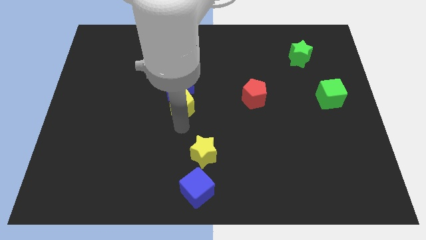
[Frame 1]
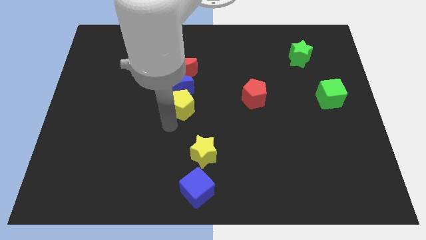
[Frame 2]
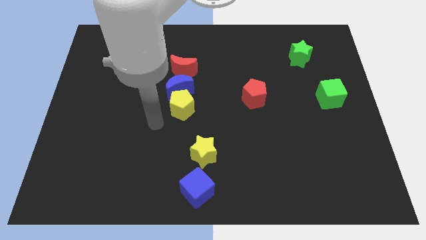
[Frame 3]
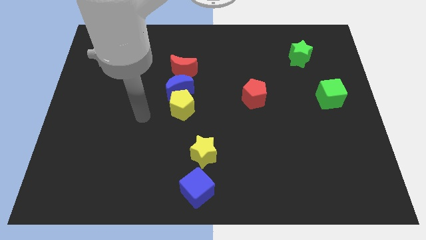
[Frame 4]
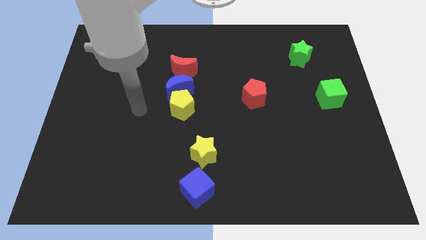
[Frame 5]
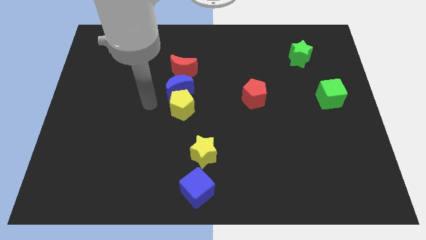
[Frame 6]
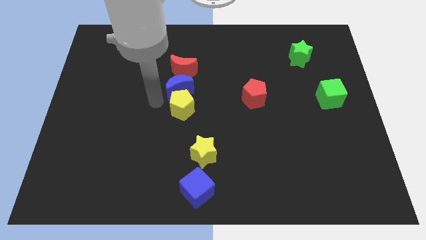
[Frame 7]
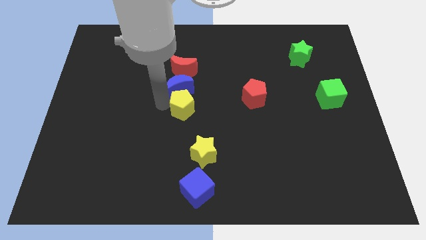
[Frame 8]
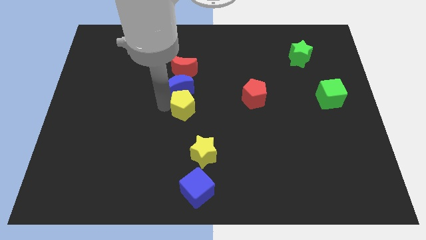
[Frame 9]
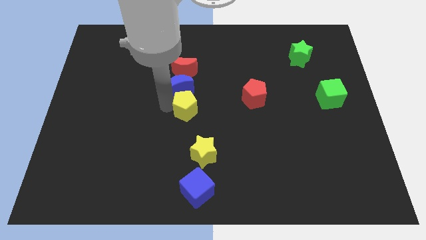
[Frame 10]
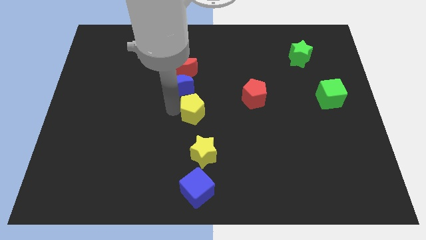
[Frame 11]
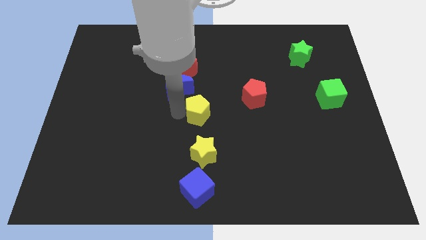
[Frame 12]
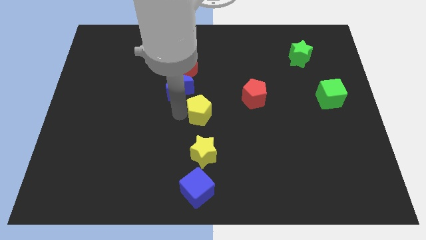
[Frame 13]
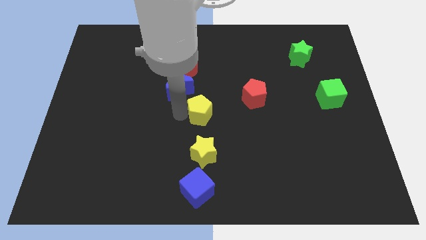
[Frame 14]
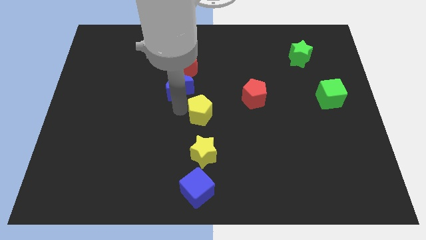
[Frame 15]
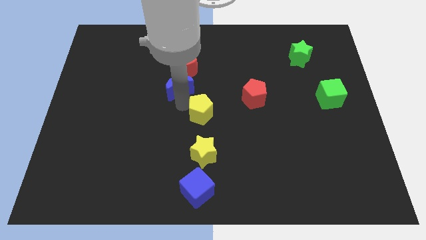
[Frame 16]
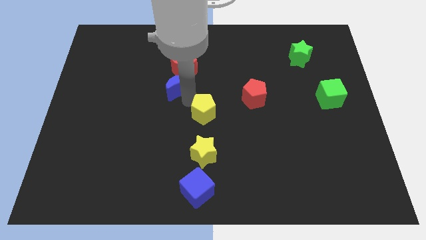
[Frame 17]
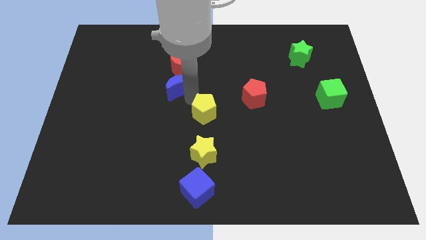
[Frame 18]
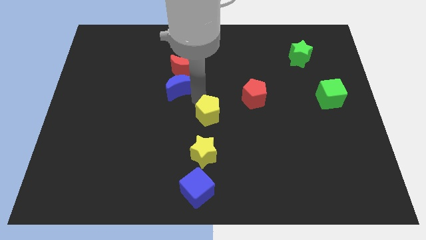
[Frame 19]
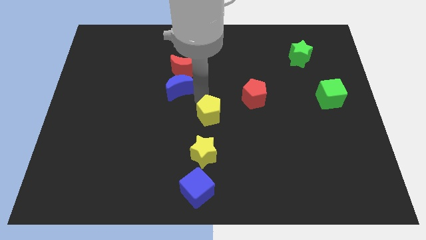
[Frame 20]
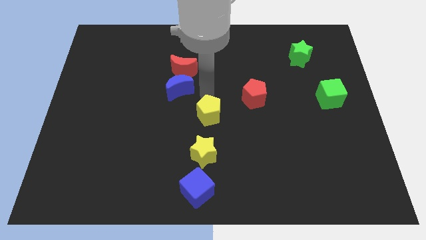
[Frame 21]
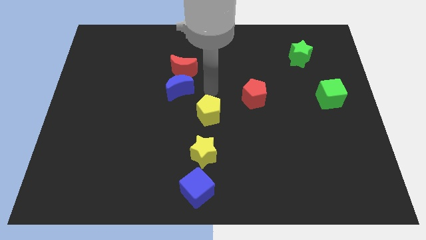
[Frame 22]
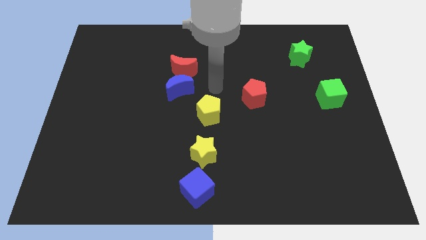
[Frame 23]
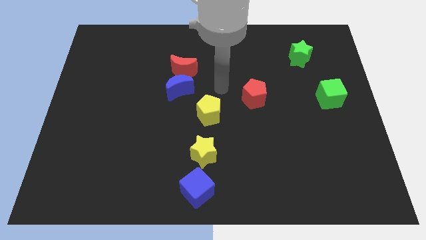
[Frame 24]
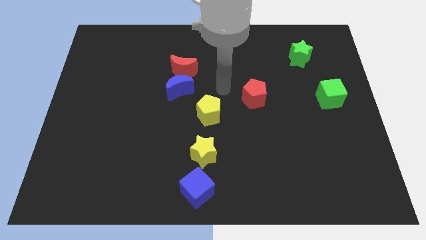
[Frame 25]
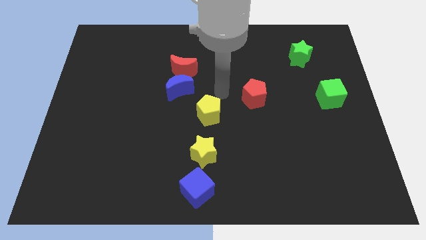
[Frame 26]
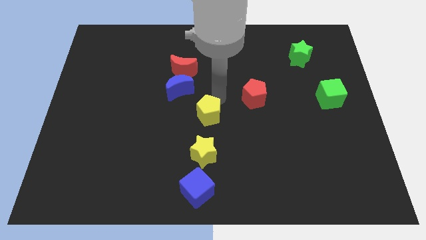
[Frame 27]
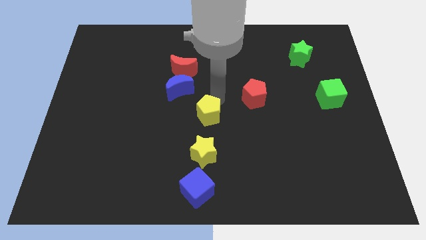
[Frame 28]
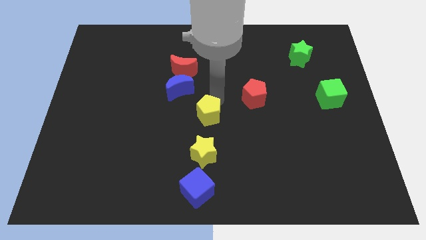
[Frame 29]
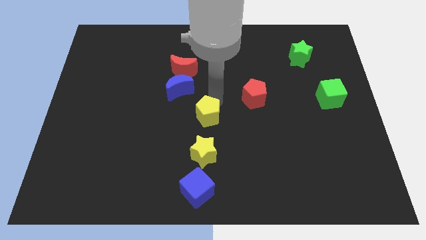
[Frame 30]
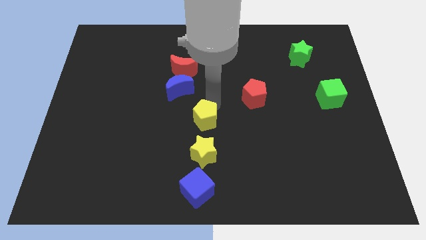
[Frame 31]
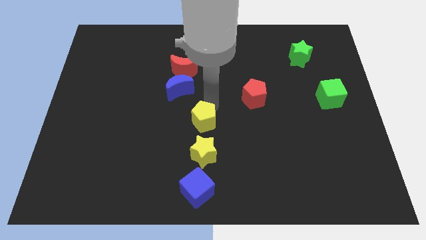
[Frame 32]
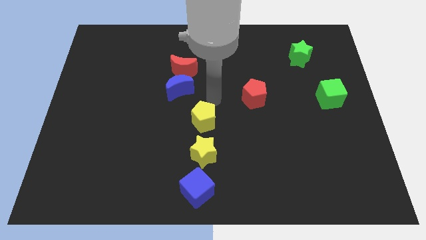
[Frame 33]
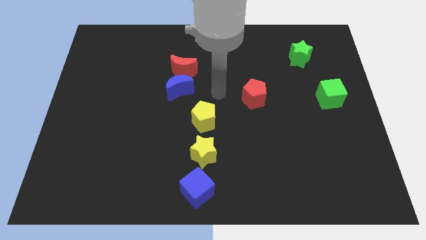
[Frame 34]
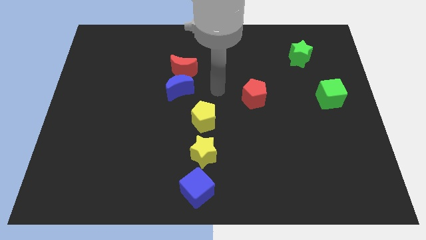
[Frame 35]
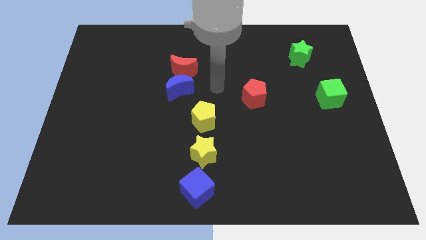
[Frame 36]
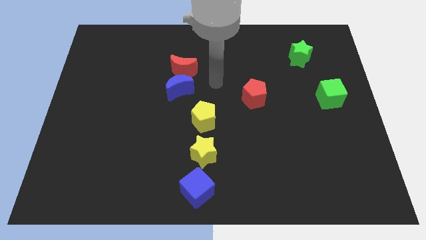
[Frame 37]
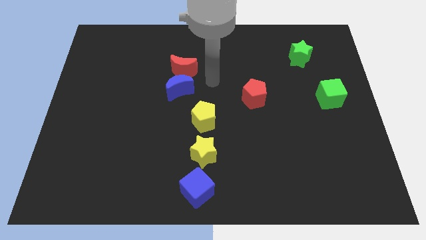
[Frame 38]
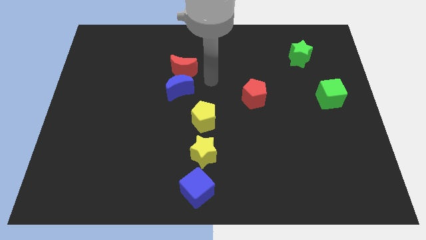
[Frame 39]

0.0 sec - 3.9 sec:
drag the yellow pentagon vertically above the yellow star

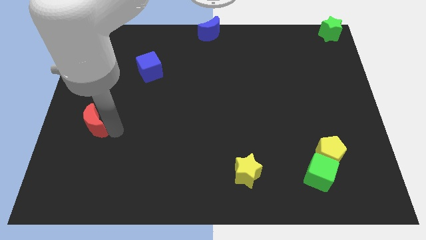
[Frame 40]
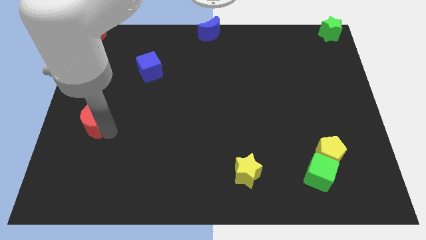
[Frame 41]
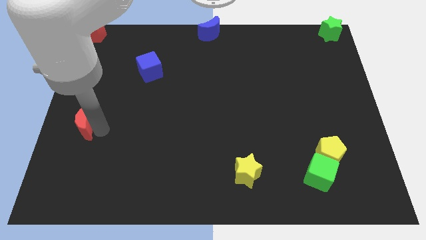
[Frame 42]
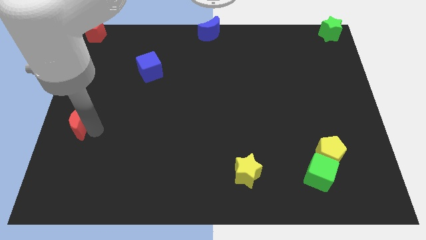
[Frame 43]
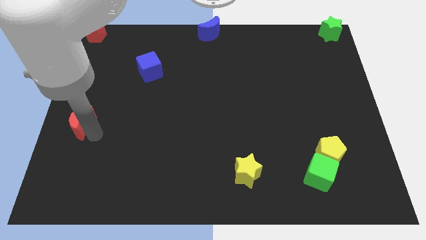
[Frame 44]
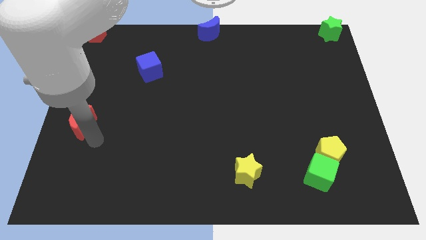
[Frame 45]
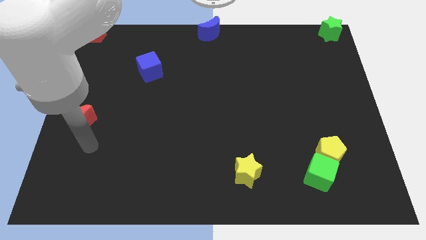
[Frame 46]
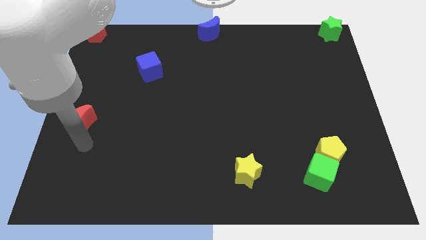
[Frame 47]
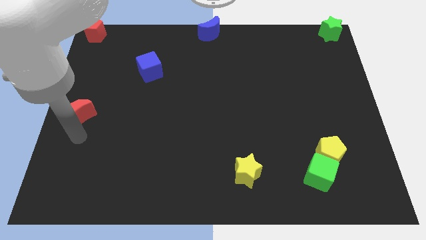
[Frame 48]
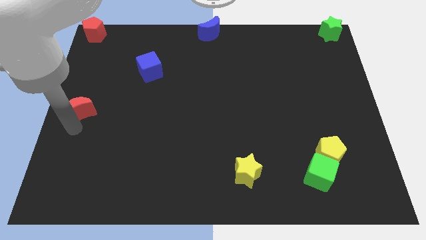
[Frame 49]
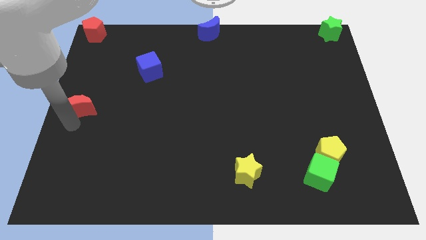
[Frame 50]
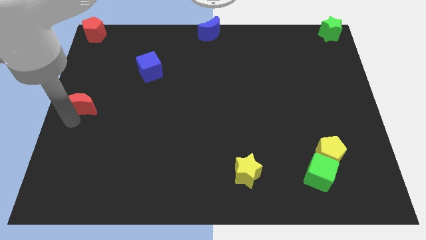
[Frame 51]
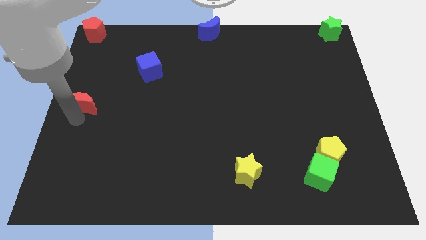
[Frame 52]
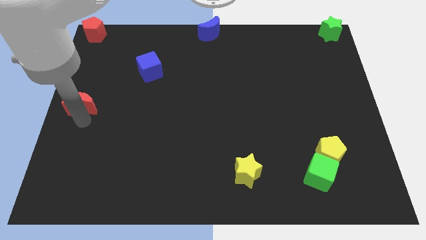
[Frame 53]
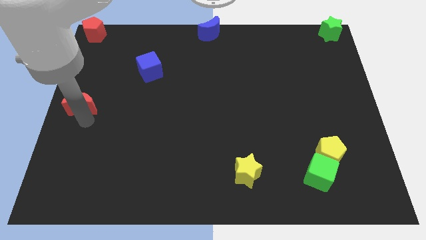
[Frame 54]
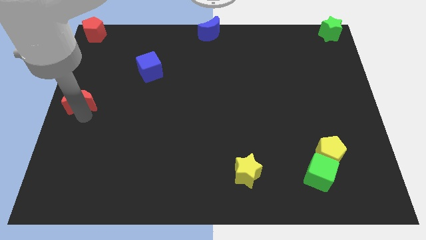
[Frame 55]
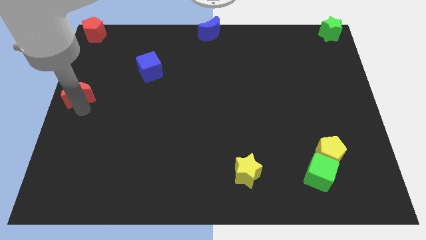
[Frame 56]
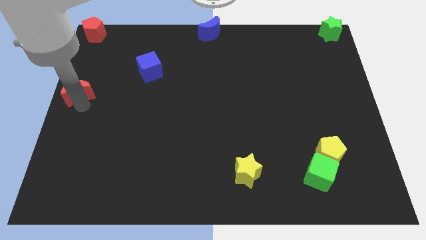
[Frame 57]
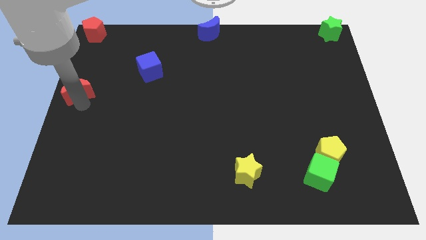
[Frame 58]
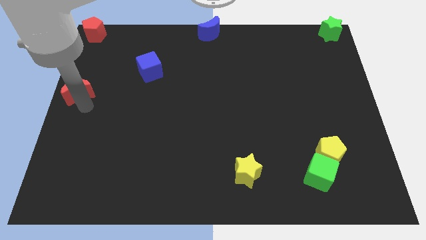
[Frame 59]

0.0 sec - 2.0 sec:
place the red moon at the left center of the board

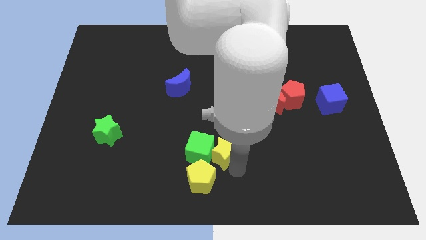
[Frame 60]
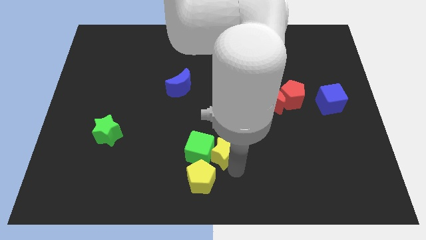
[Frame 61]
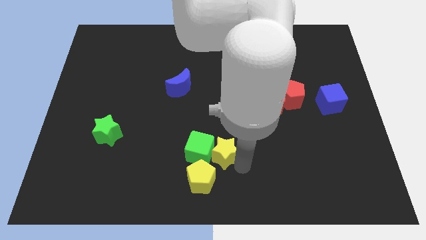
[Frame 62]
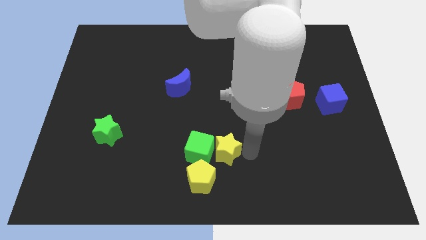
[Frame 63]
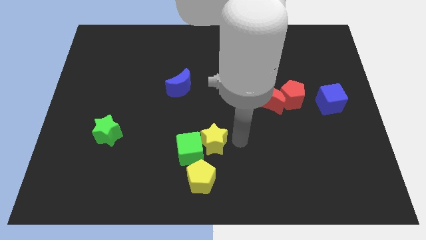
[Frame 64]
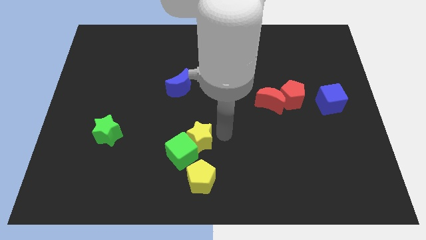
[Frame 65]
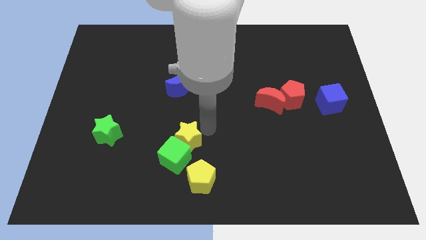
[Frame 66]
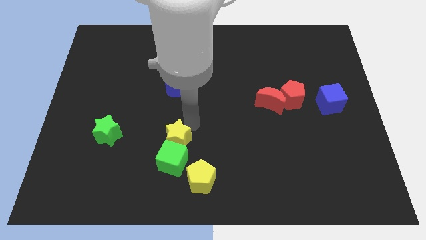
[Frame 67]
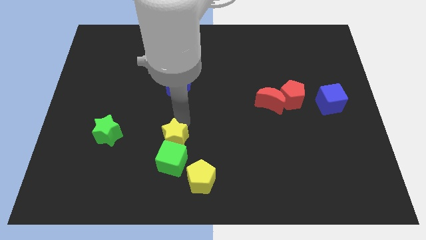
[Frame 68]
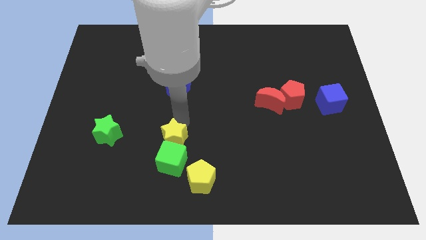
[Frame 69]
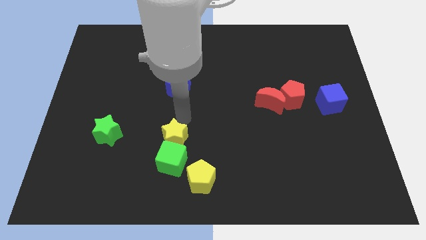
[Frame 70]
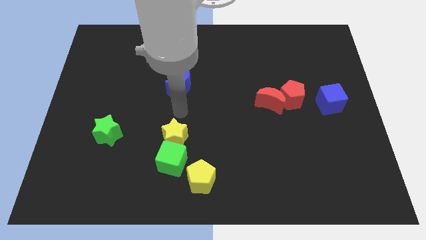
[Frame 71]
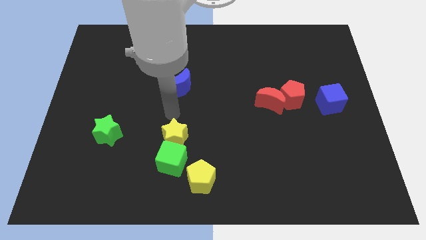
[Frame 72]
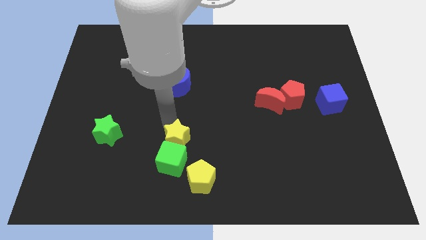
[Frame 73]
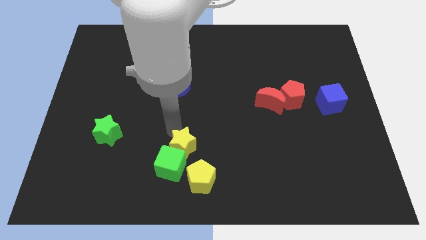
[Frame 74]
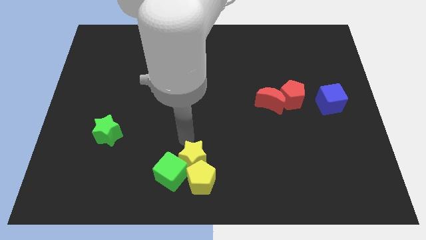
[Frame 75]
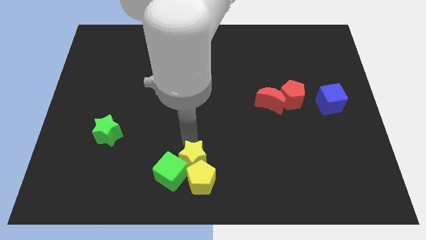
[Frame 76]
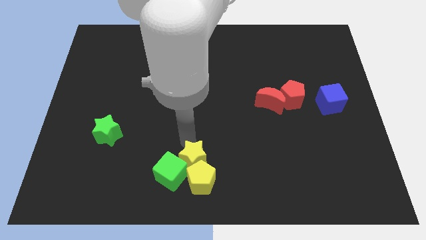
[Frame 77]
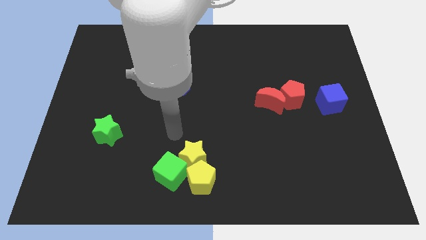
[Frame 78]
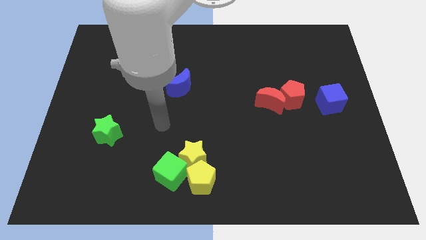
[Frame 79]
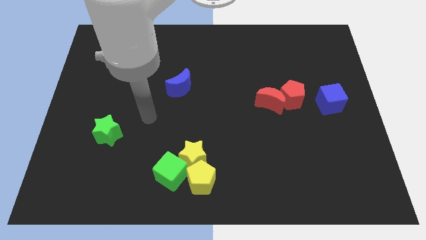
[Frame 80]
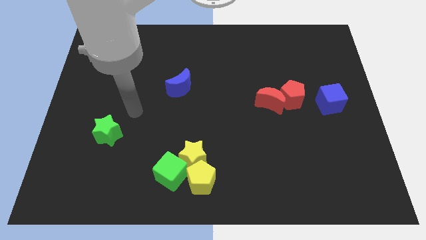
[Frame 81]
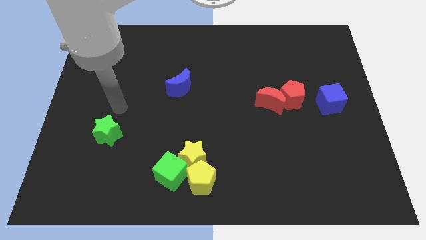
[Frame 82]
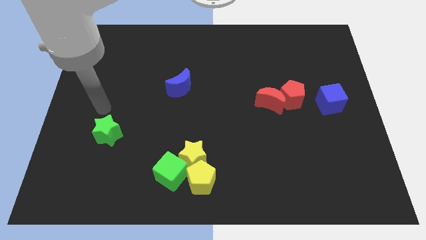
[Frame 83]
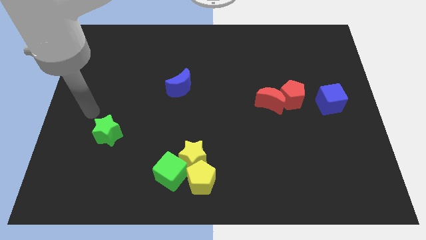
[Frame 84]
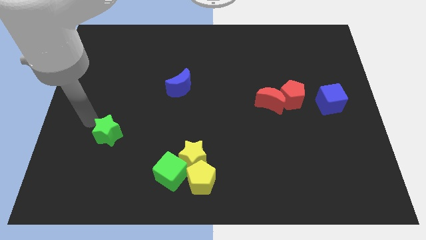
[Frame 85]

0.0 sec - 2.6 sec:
push the yellow star into the top of the yellow pentagon

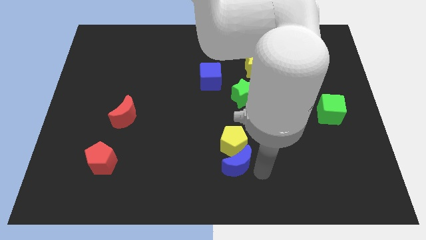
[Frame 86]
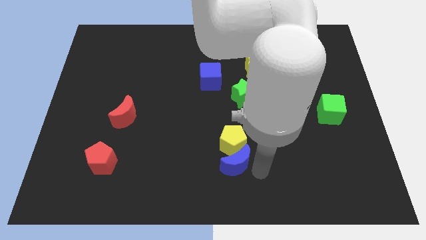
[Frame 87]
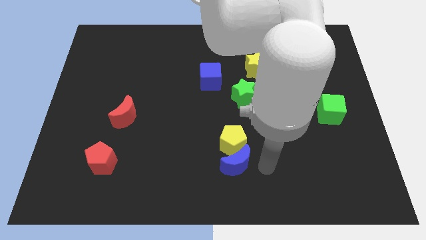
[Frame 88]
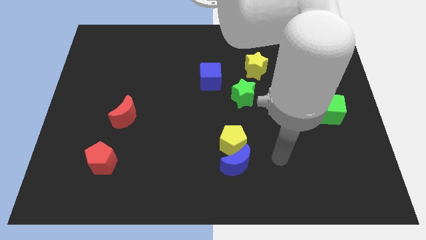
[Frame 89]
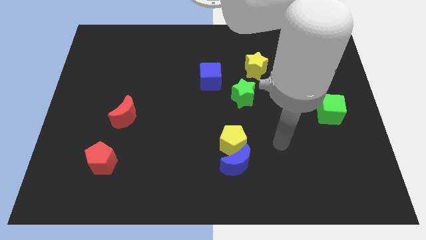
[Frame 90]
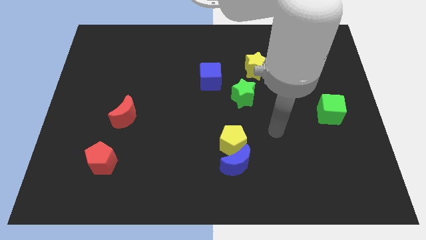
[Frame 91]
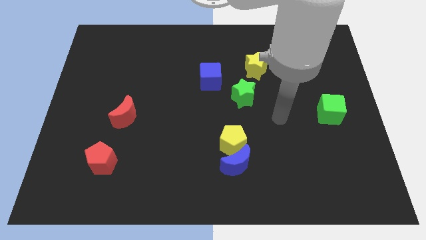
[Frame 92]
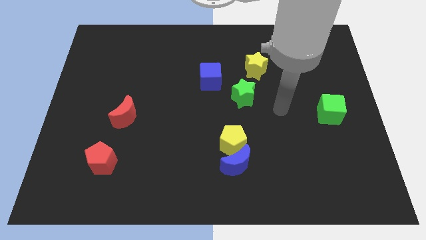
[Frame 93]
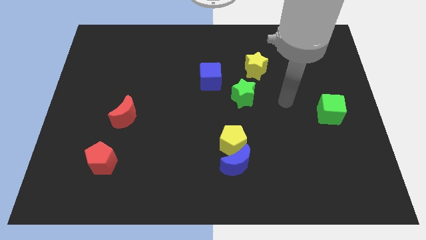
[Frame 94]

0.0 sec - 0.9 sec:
push your hand in between the green star and green cube
